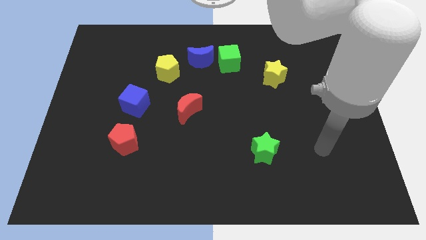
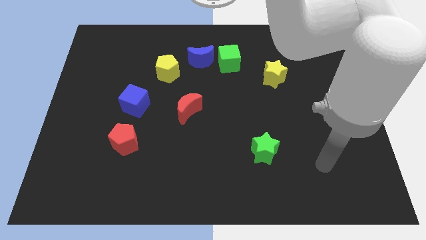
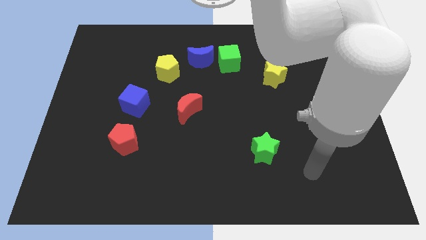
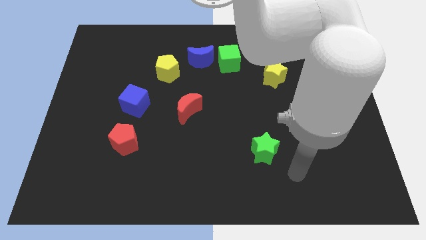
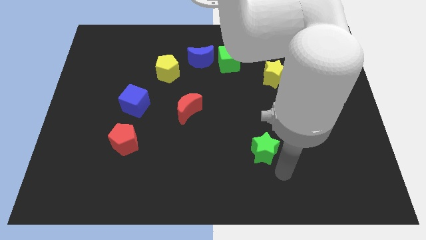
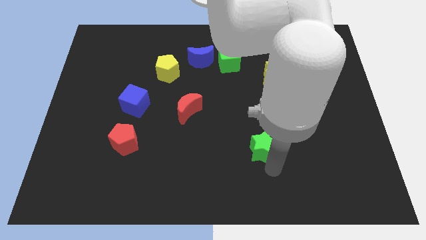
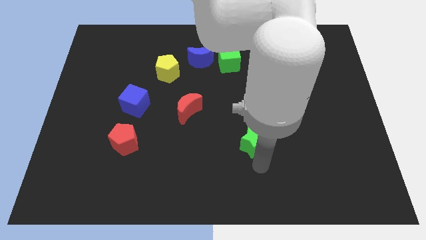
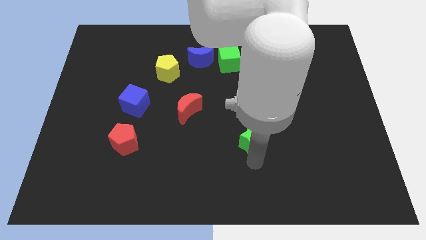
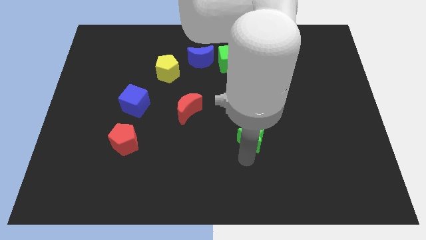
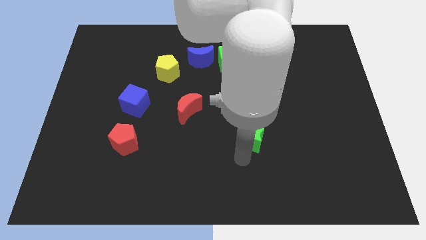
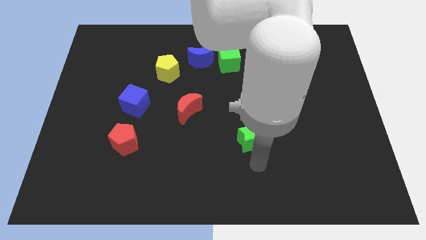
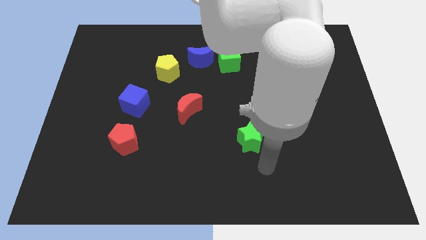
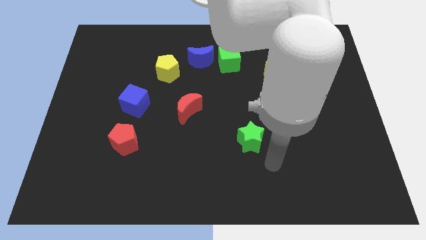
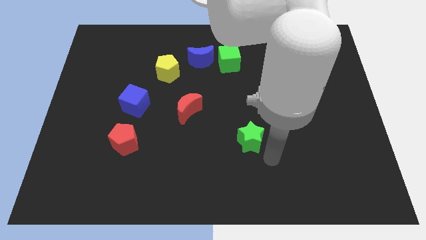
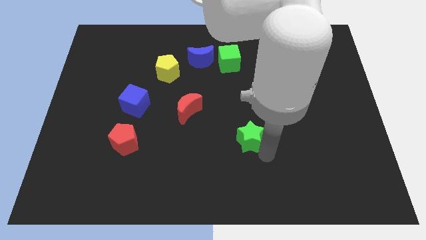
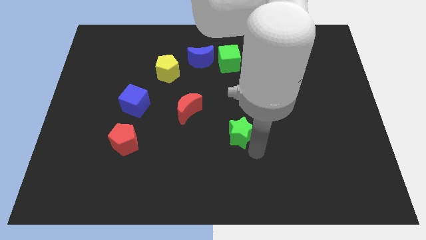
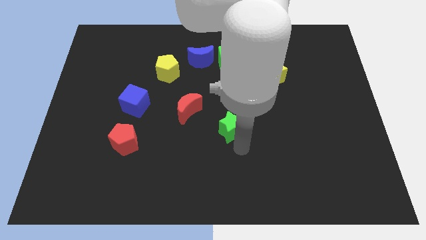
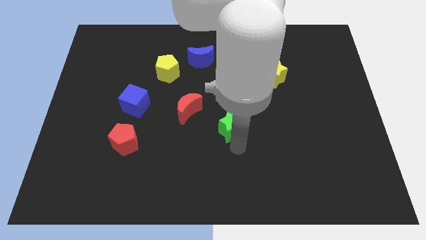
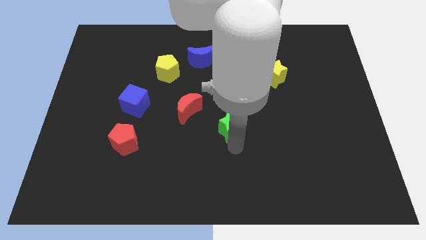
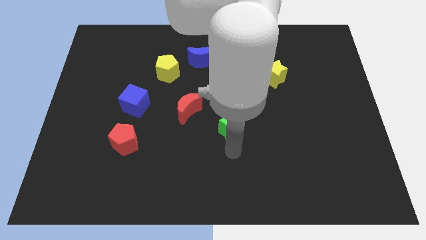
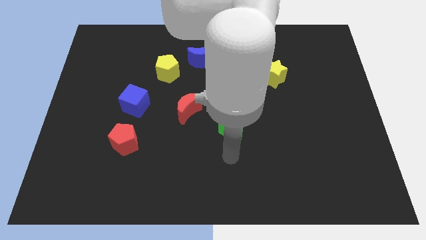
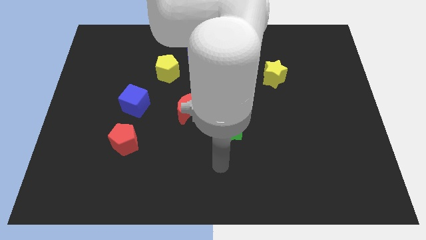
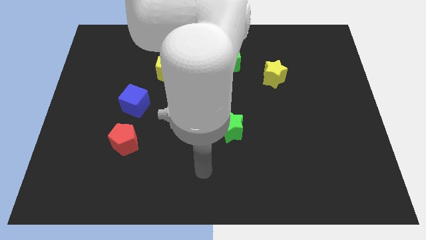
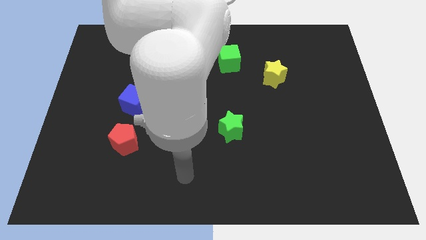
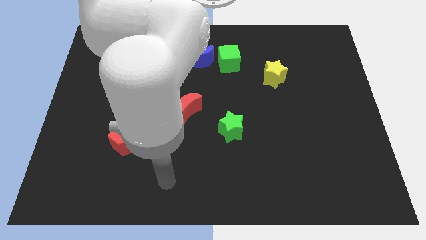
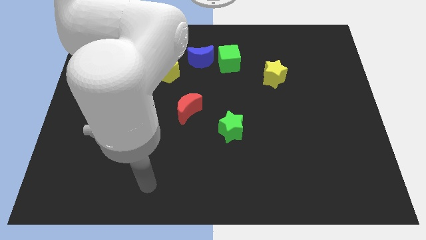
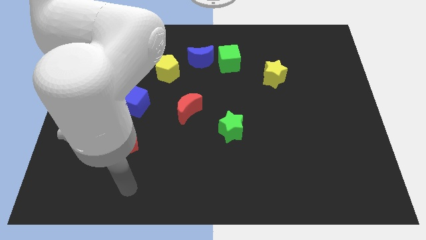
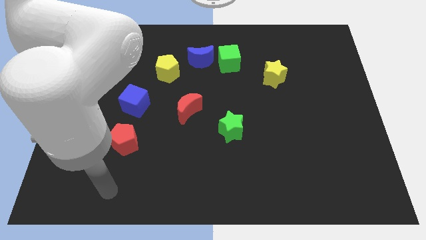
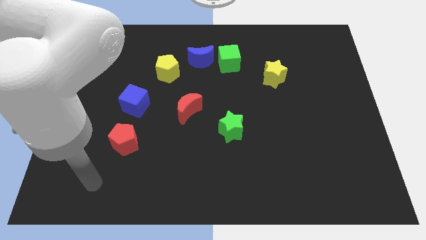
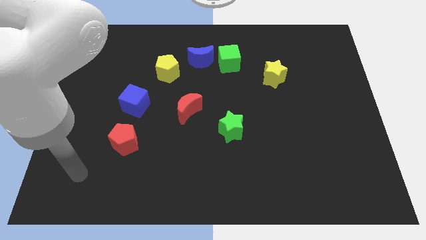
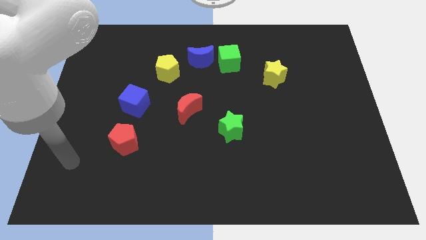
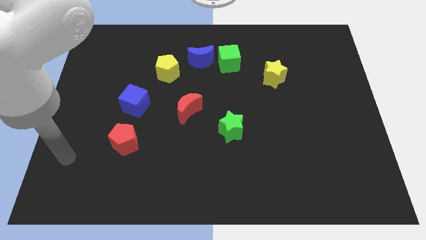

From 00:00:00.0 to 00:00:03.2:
push the green star star towards the red moon

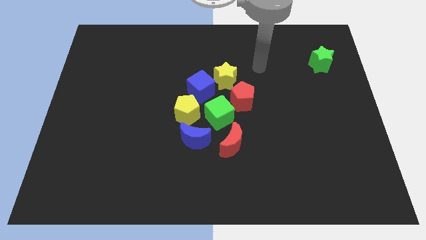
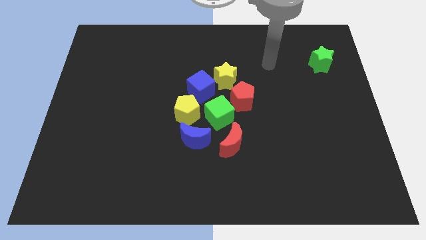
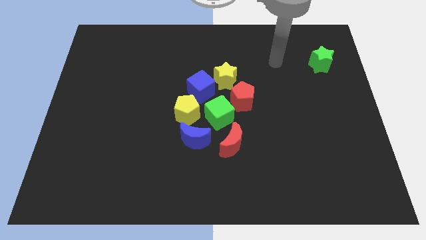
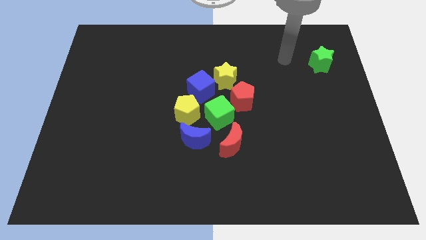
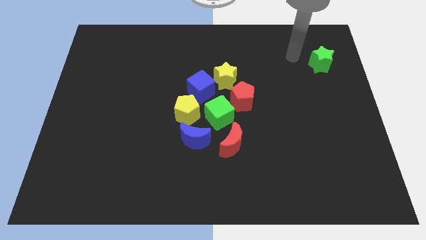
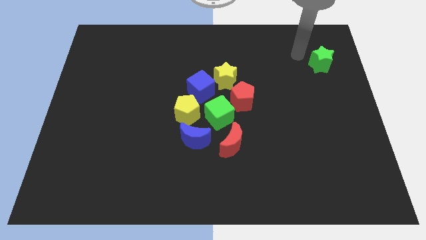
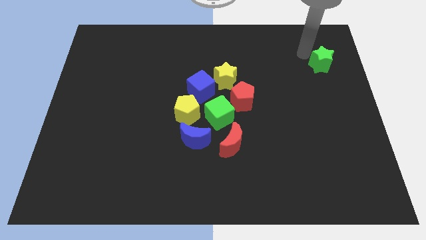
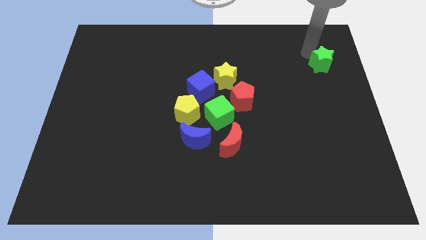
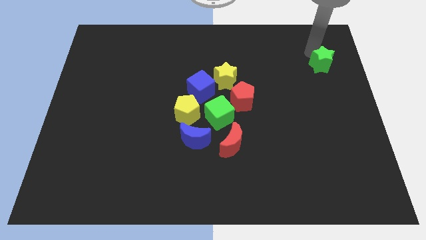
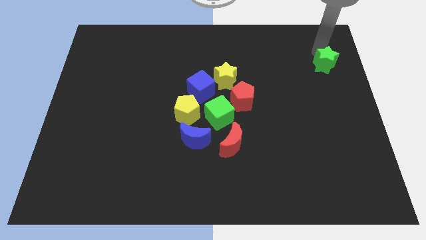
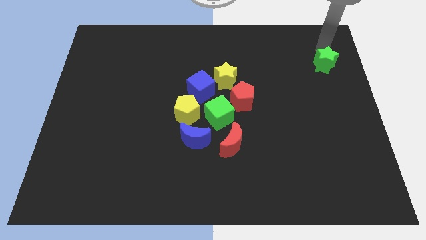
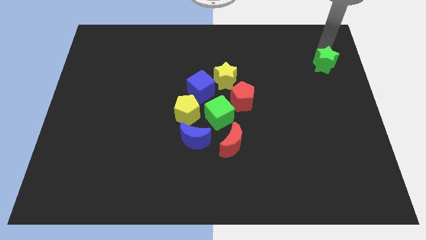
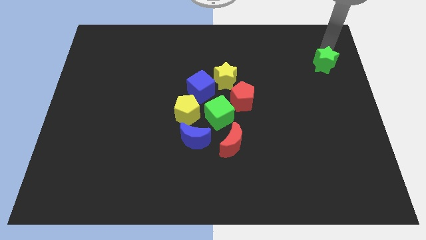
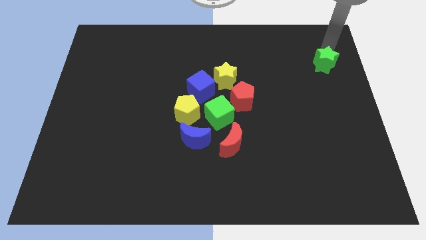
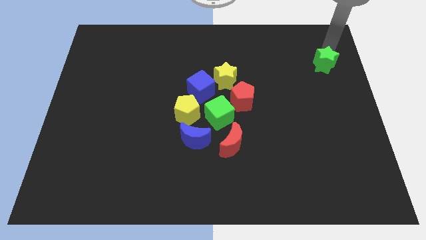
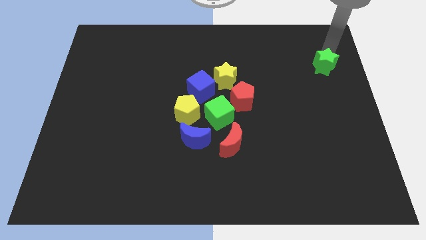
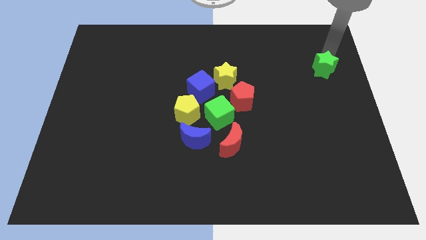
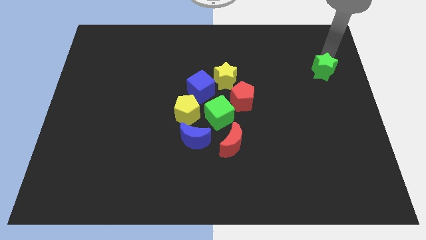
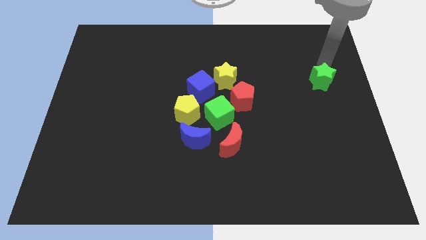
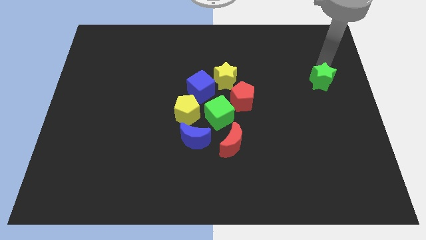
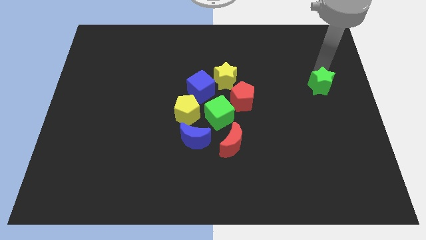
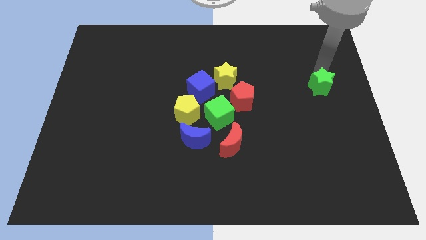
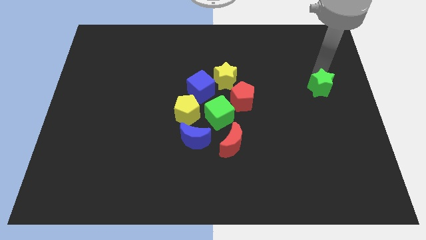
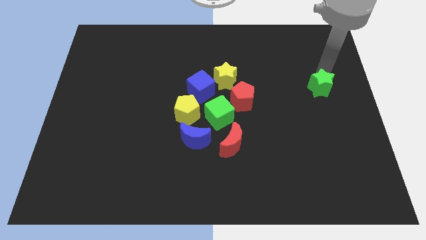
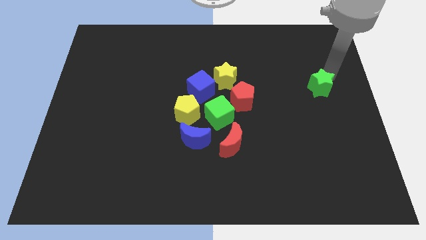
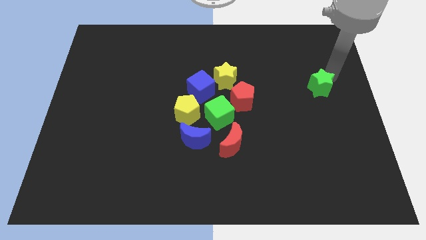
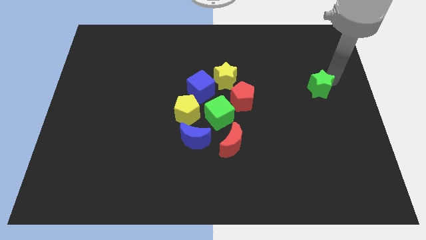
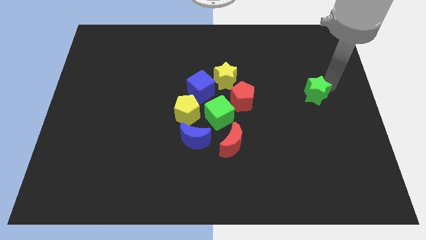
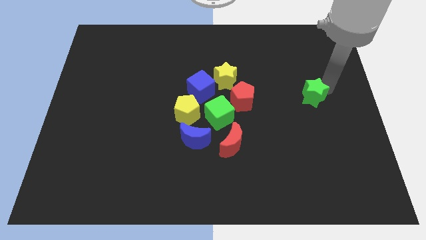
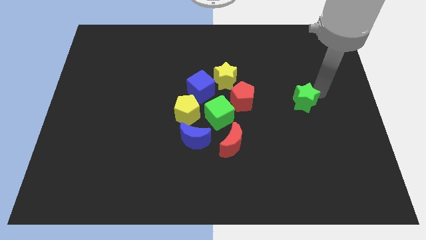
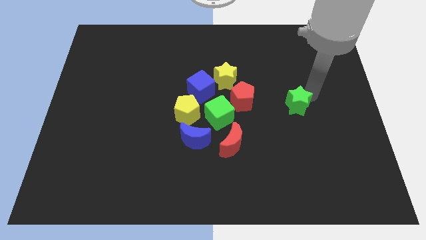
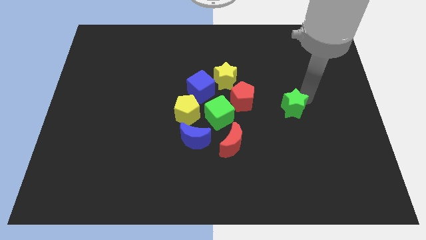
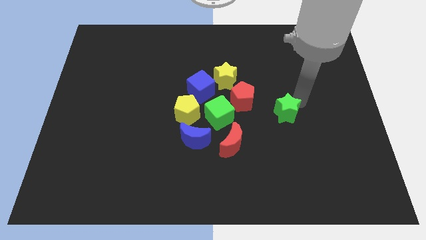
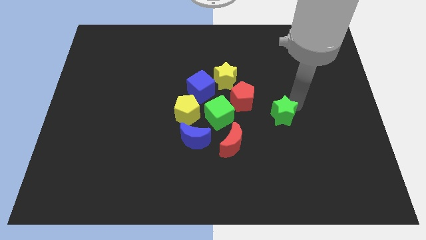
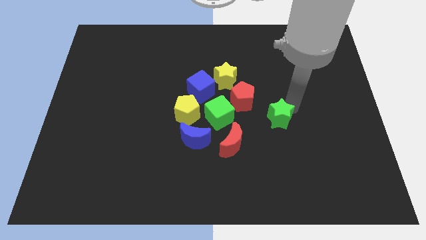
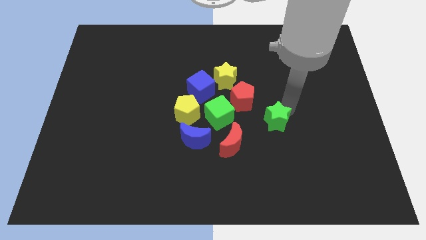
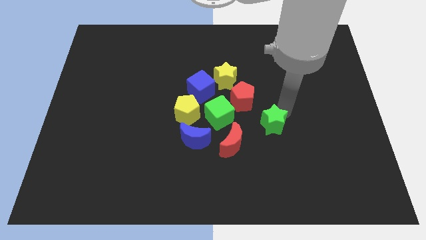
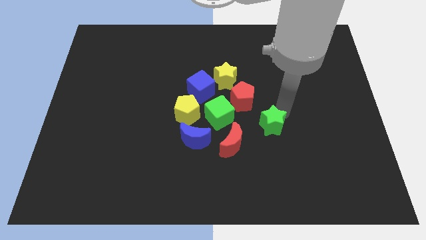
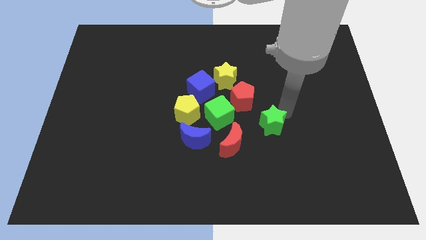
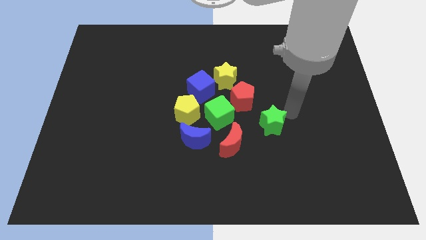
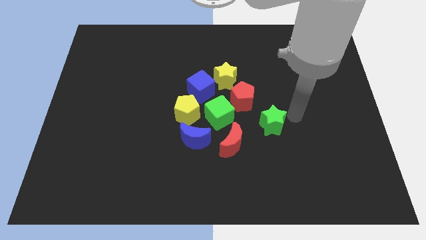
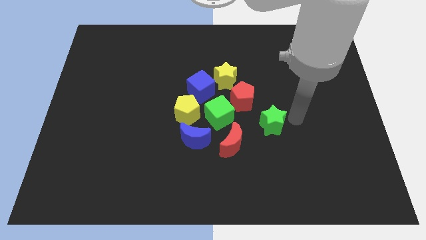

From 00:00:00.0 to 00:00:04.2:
move green star diagonally towards red moon

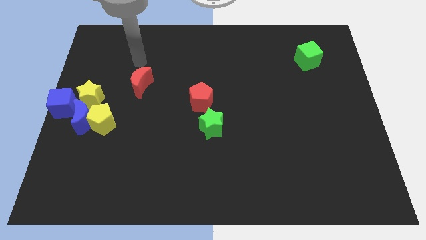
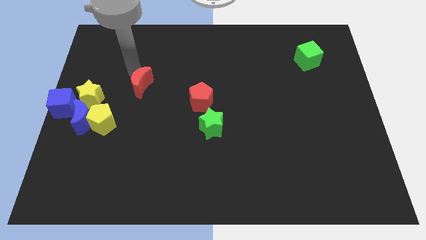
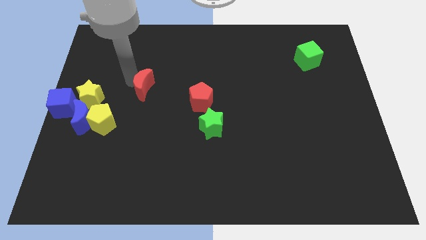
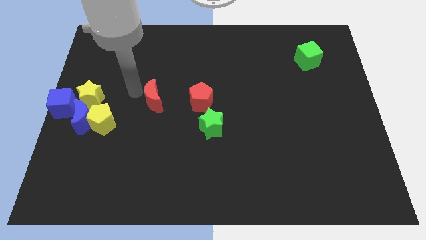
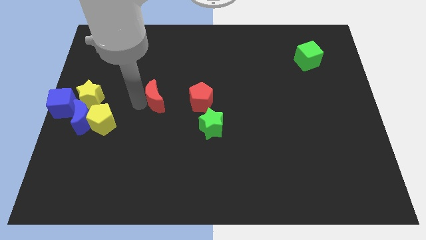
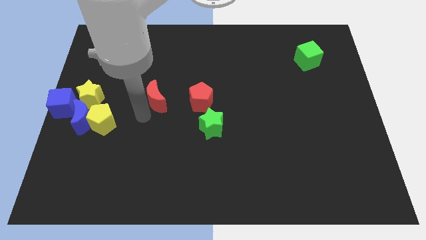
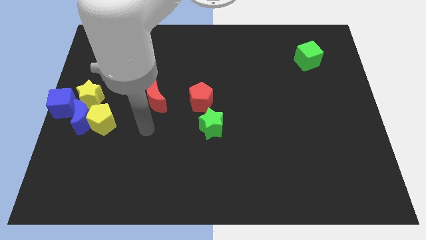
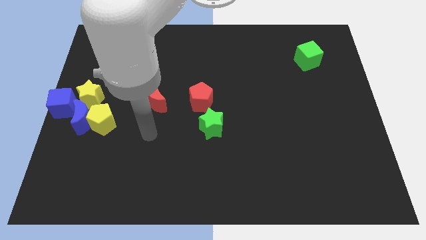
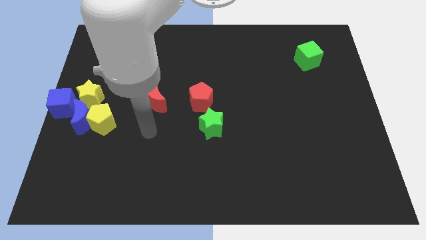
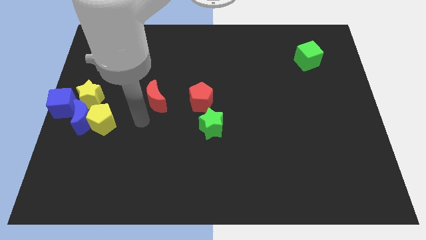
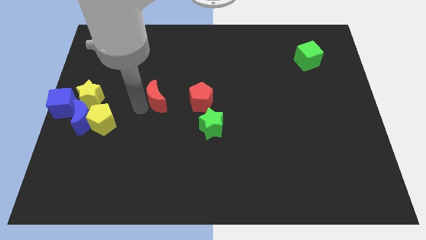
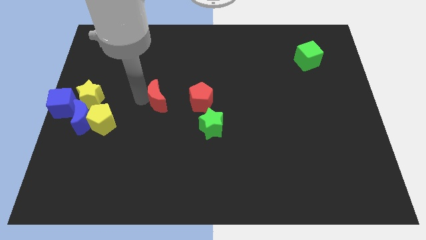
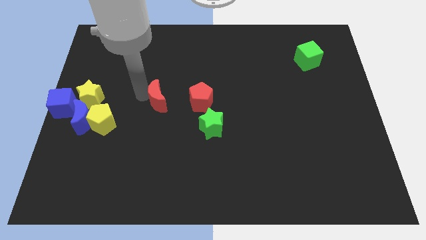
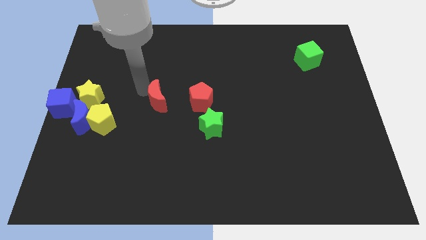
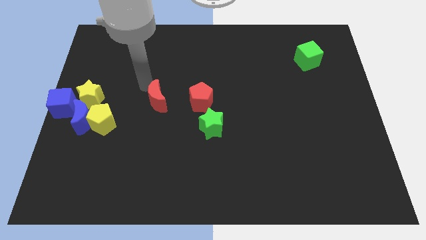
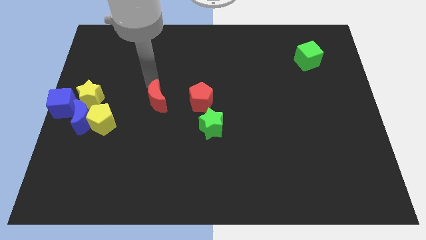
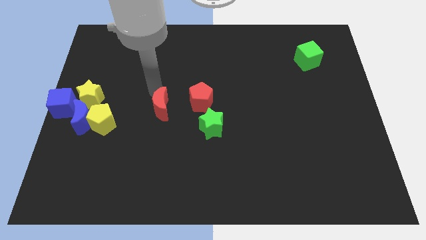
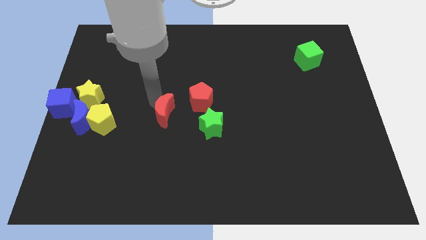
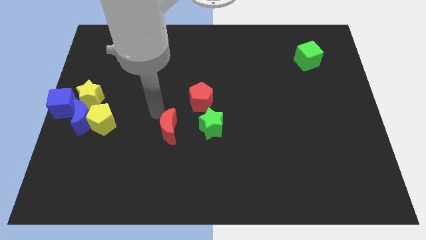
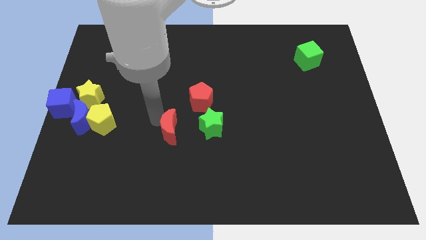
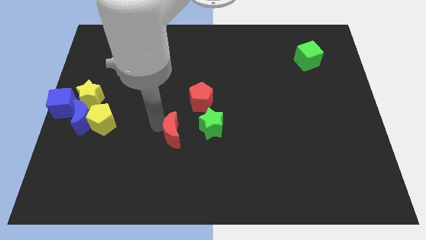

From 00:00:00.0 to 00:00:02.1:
place red moon to the left of green star
